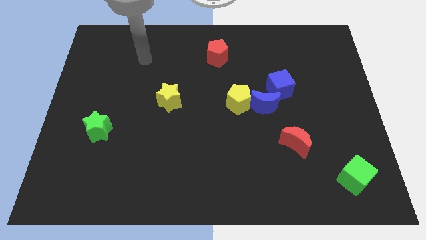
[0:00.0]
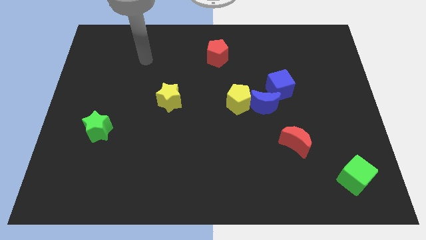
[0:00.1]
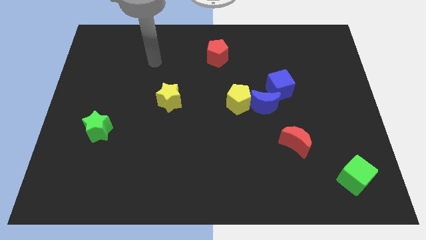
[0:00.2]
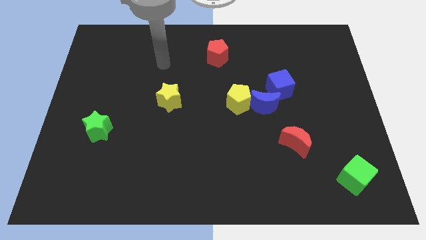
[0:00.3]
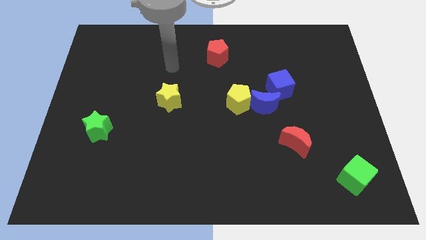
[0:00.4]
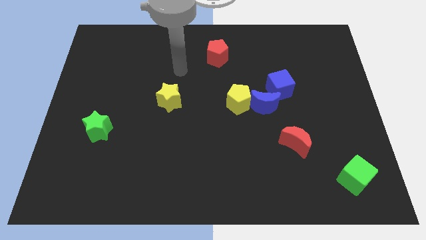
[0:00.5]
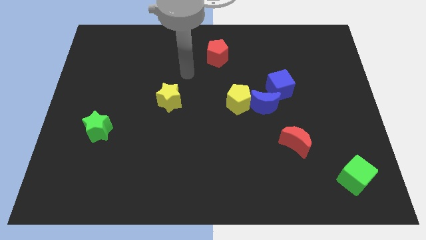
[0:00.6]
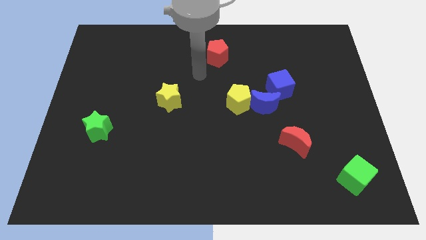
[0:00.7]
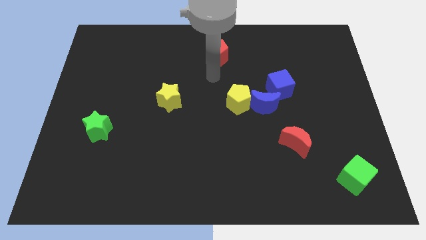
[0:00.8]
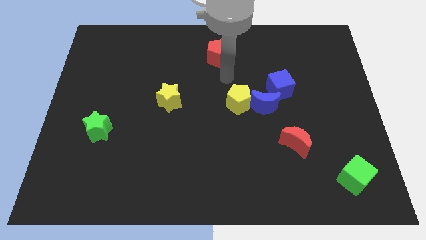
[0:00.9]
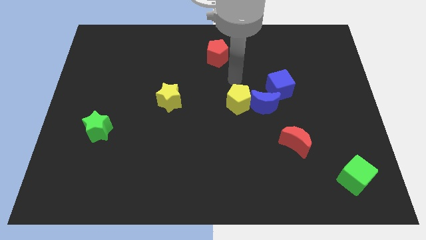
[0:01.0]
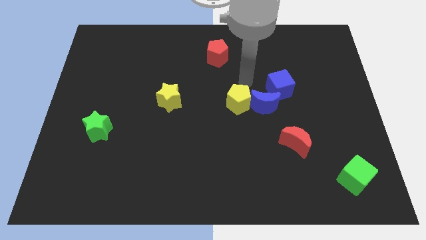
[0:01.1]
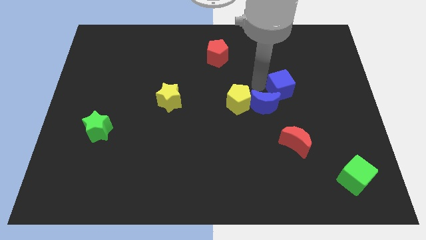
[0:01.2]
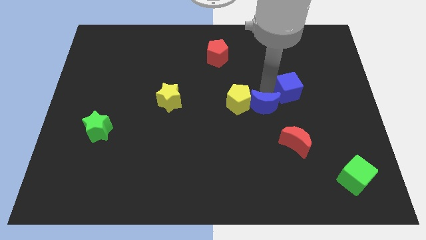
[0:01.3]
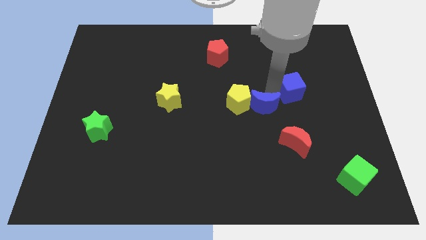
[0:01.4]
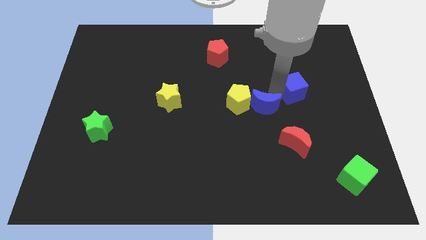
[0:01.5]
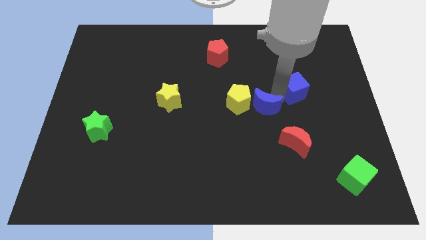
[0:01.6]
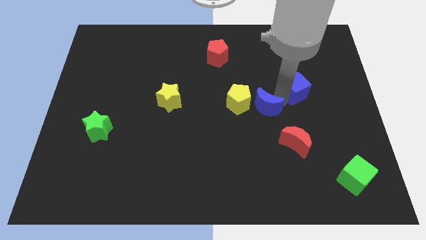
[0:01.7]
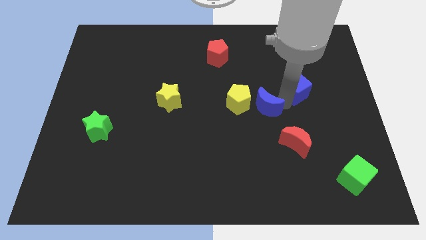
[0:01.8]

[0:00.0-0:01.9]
slightly push the blue cube and blue moon

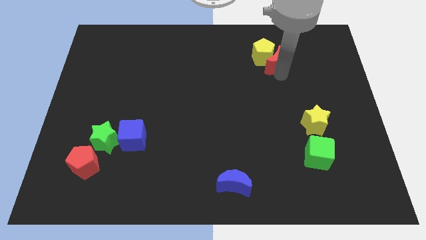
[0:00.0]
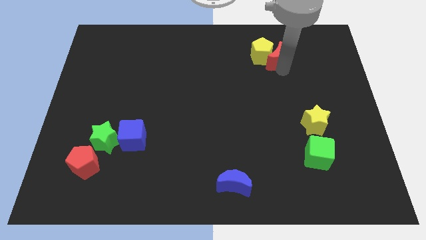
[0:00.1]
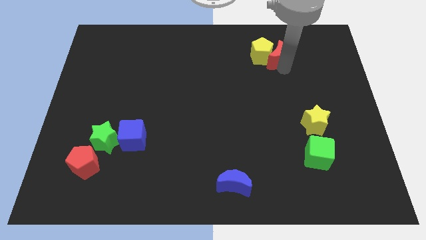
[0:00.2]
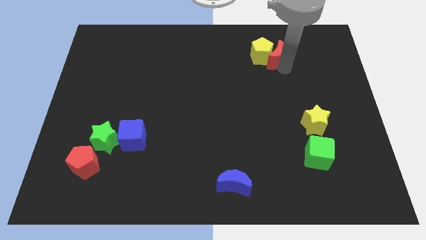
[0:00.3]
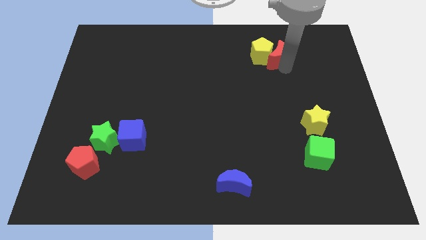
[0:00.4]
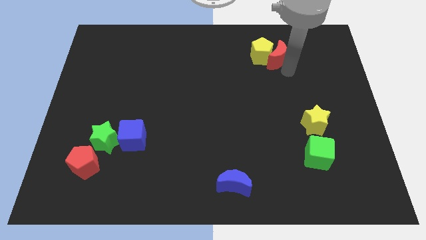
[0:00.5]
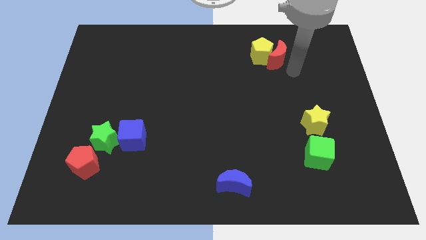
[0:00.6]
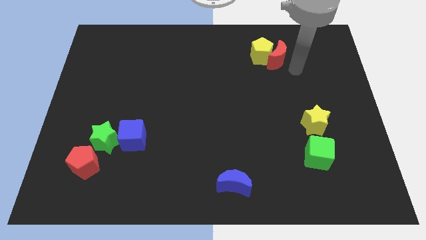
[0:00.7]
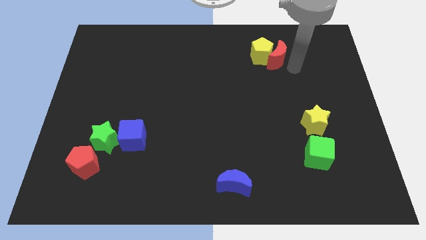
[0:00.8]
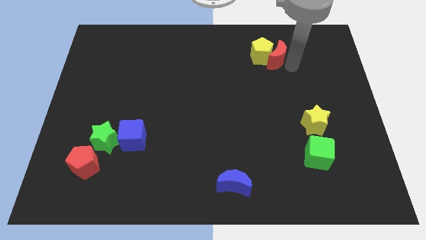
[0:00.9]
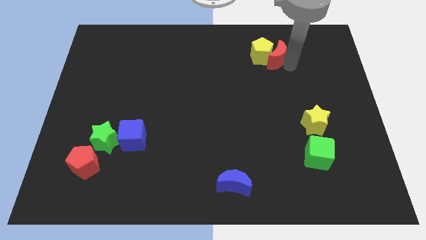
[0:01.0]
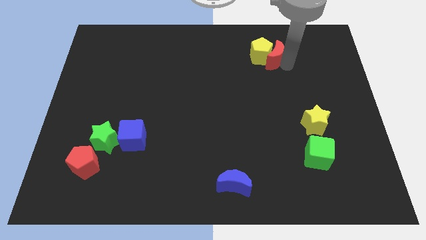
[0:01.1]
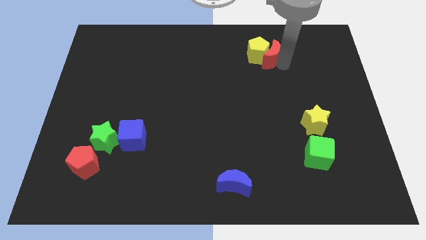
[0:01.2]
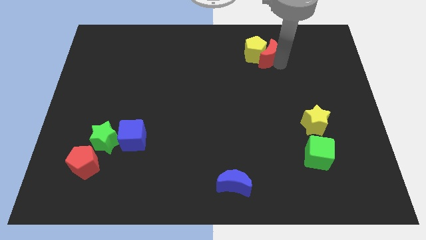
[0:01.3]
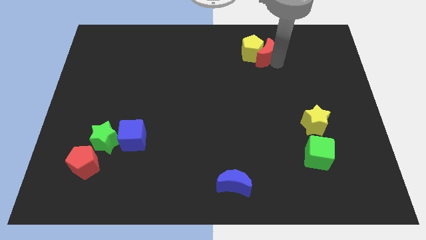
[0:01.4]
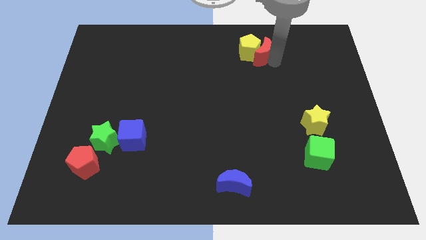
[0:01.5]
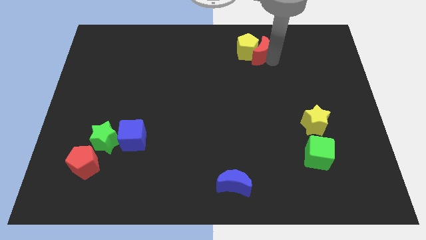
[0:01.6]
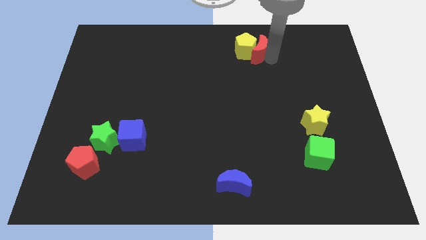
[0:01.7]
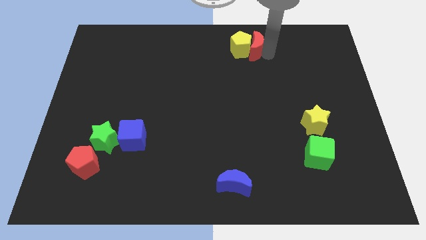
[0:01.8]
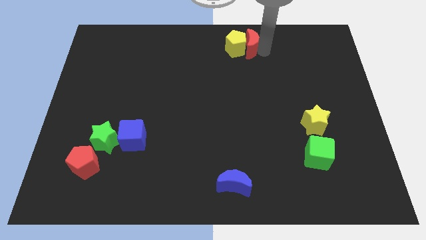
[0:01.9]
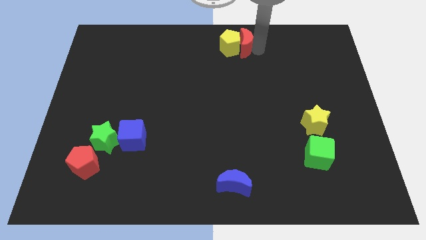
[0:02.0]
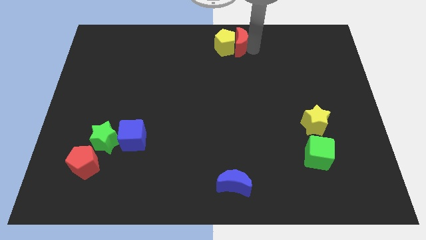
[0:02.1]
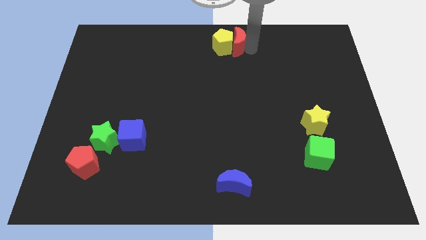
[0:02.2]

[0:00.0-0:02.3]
push the red moon and yellow pentagon towards the center

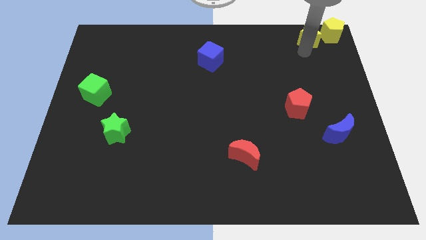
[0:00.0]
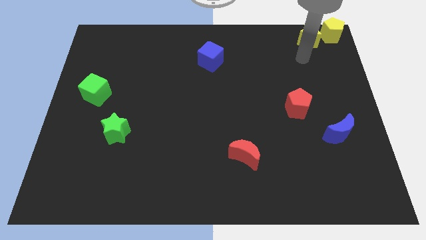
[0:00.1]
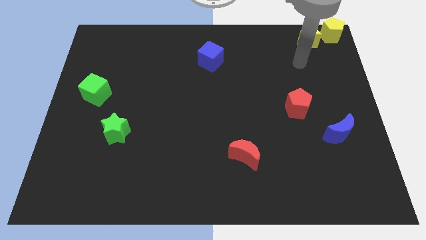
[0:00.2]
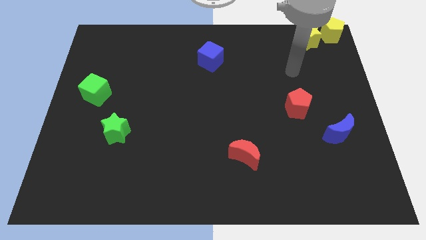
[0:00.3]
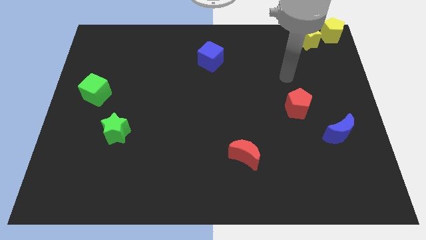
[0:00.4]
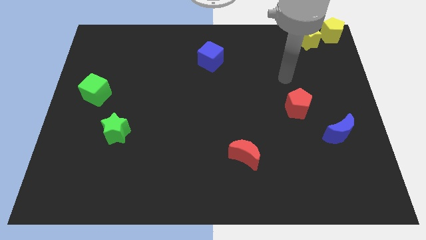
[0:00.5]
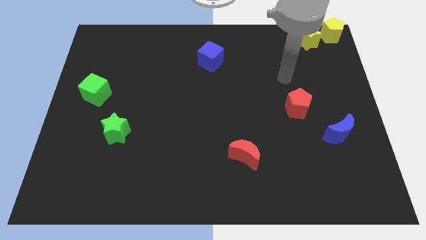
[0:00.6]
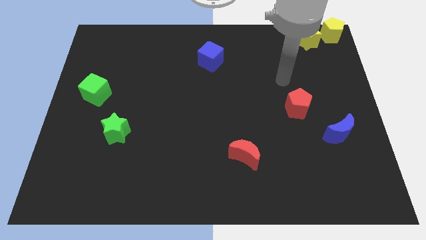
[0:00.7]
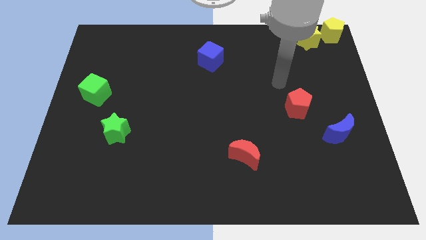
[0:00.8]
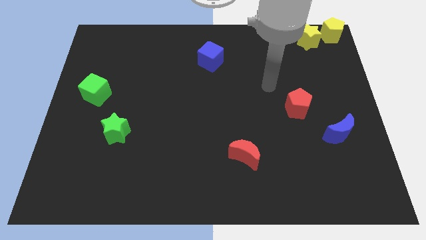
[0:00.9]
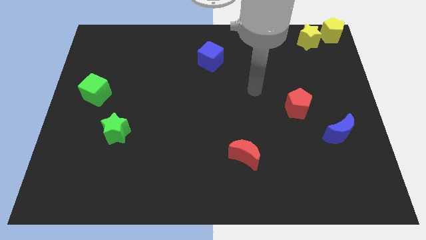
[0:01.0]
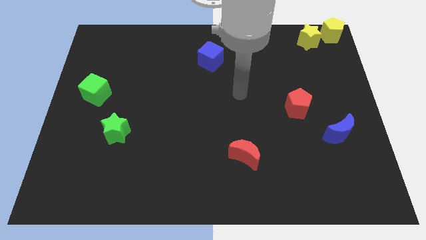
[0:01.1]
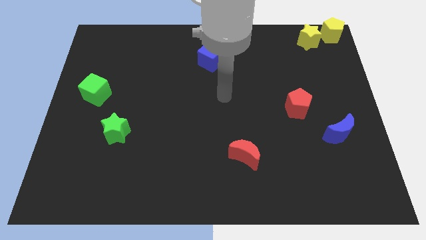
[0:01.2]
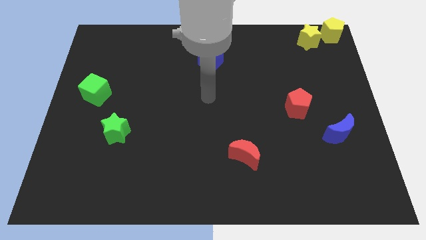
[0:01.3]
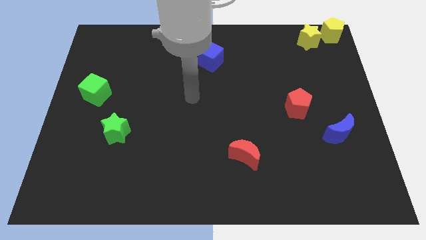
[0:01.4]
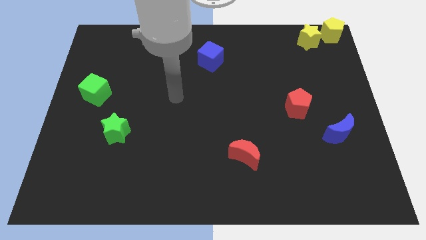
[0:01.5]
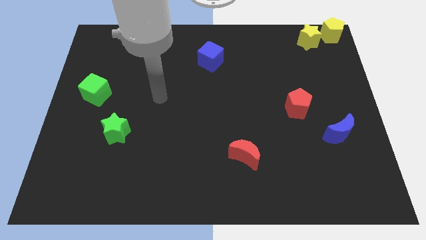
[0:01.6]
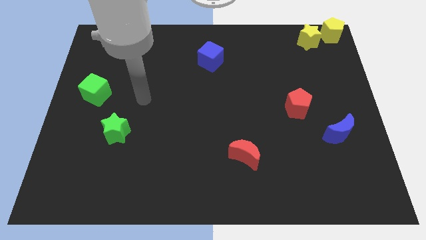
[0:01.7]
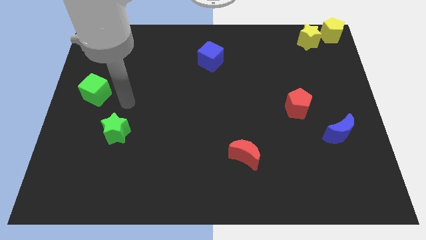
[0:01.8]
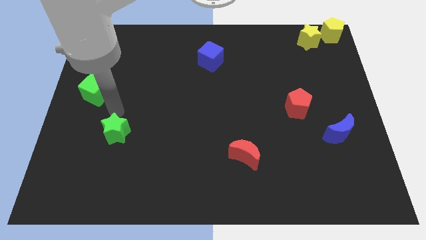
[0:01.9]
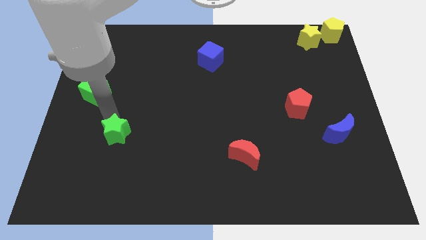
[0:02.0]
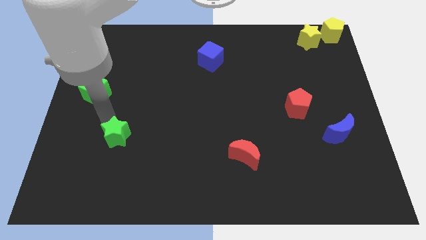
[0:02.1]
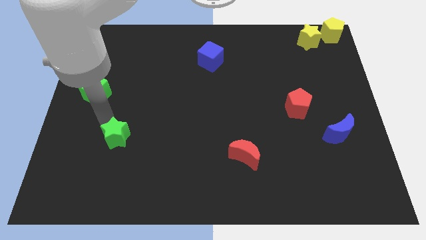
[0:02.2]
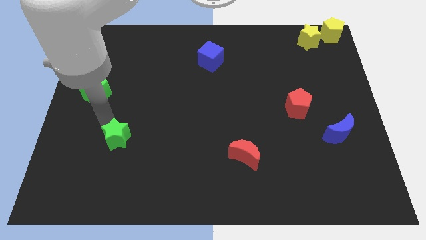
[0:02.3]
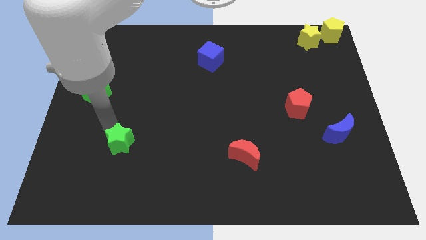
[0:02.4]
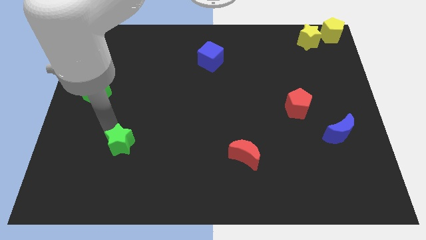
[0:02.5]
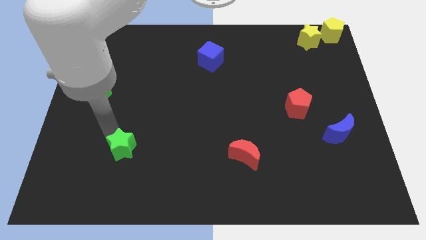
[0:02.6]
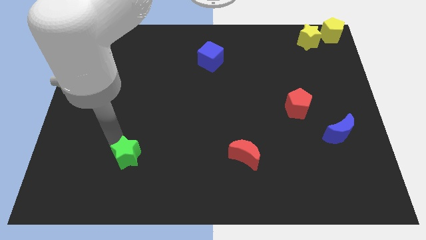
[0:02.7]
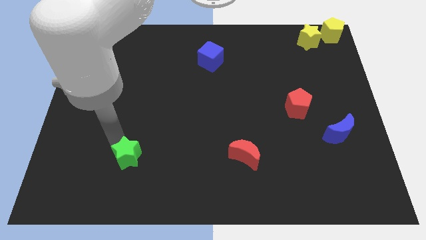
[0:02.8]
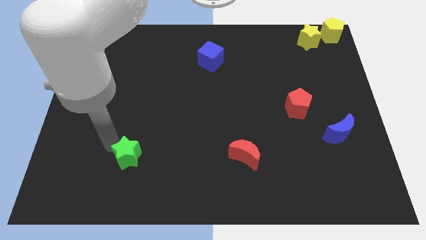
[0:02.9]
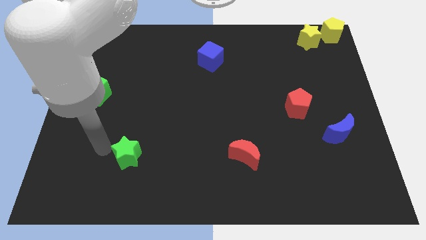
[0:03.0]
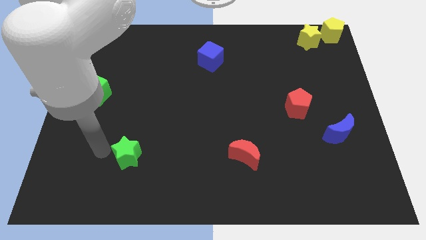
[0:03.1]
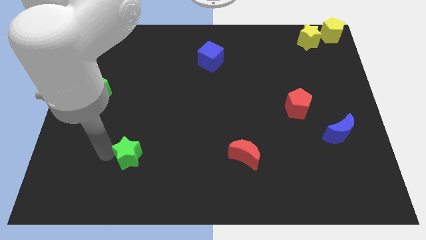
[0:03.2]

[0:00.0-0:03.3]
place the green star horizontally at the left side of the red crescent

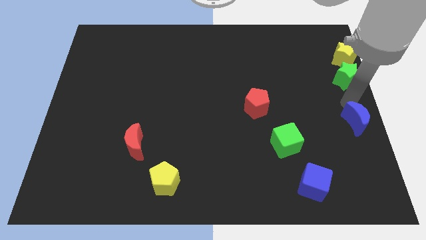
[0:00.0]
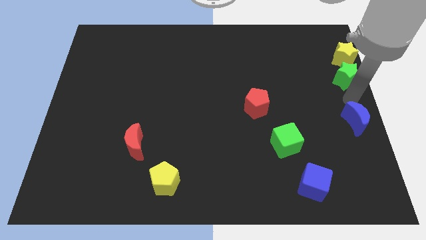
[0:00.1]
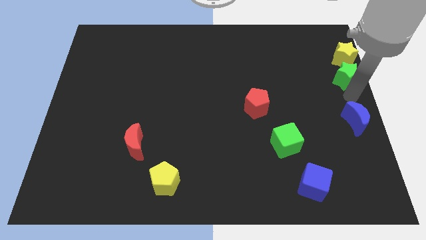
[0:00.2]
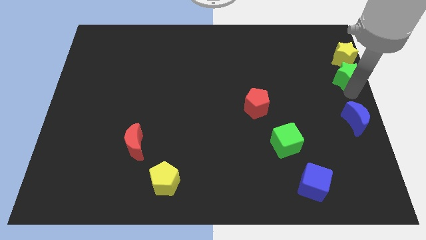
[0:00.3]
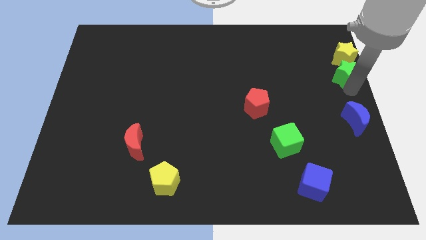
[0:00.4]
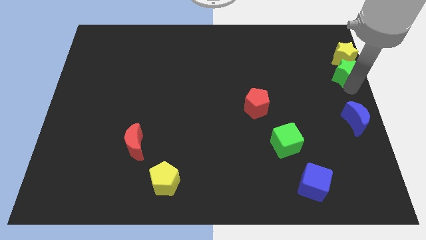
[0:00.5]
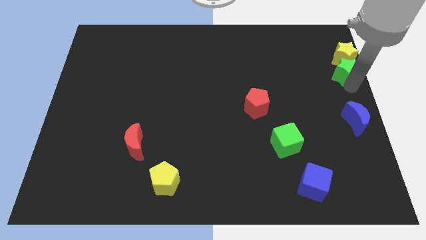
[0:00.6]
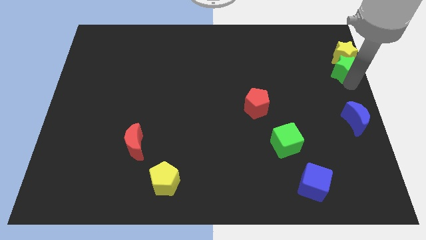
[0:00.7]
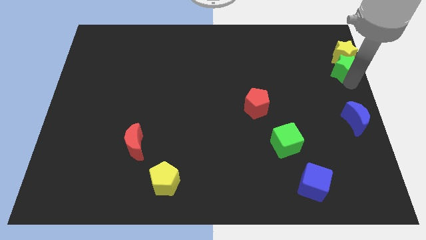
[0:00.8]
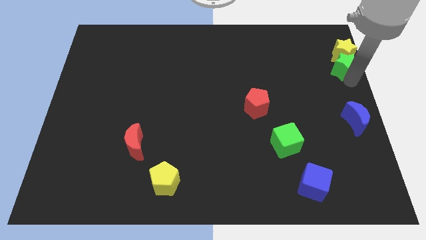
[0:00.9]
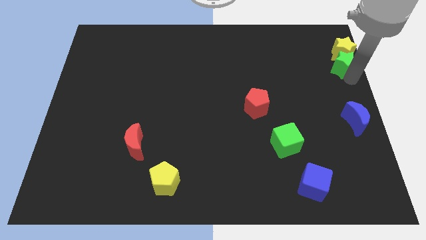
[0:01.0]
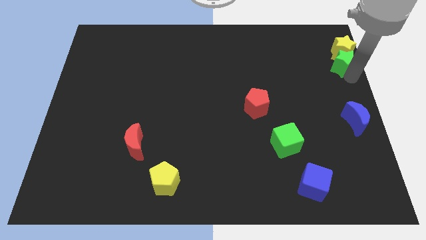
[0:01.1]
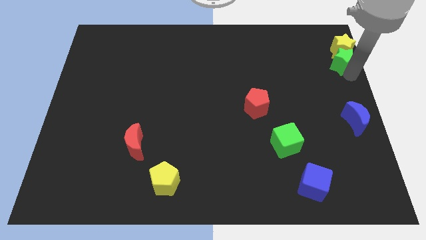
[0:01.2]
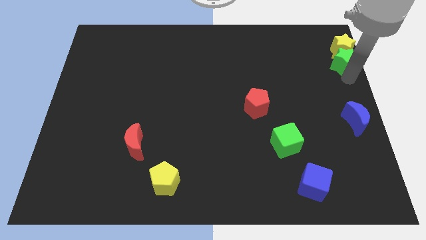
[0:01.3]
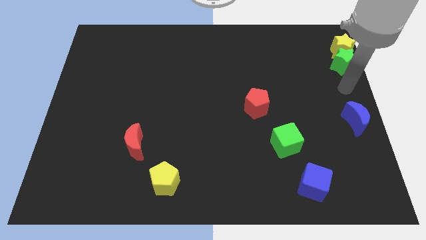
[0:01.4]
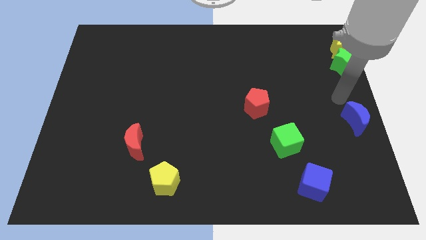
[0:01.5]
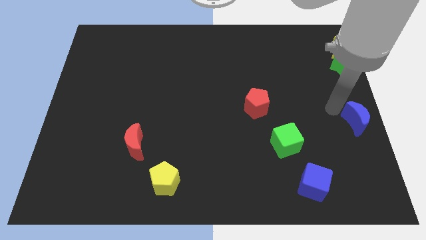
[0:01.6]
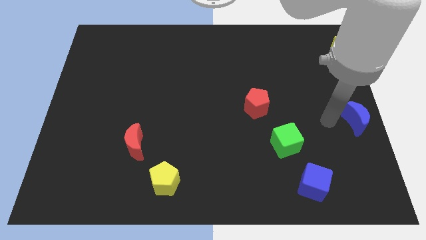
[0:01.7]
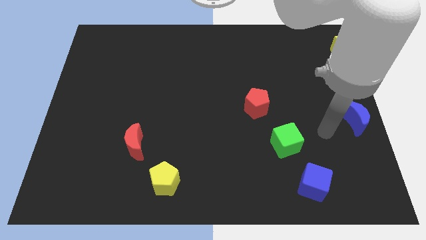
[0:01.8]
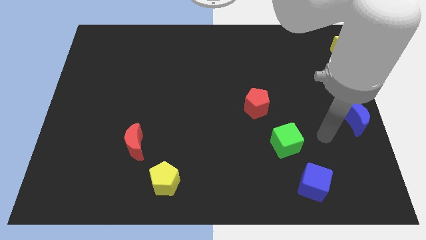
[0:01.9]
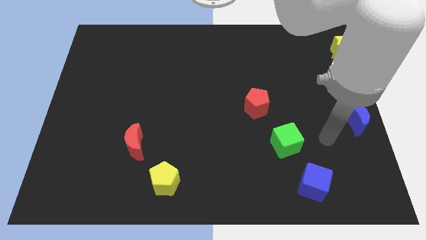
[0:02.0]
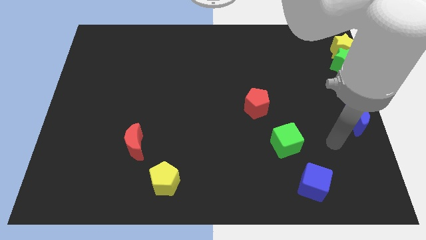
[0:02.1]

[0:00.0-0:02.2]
move the yellow star towards the top right side of the board with the help of the green star
